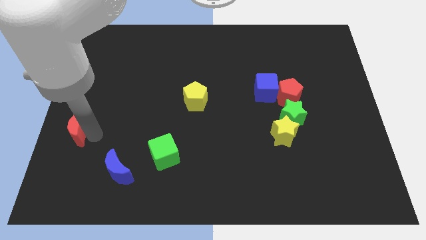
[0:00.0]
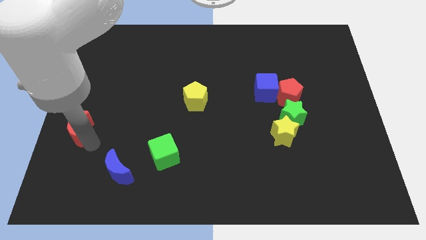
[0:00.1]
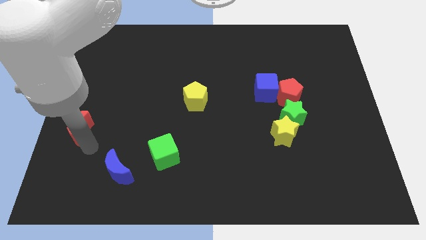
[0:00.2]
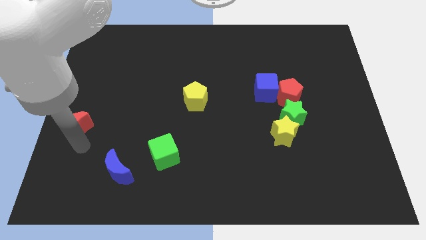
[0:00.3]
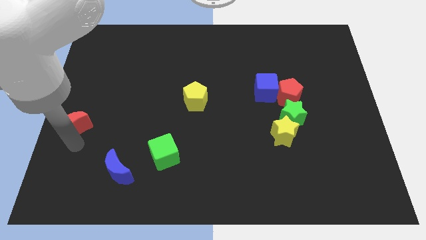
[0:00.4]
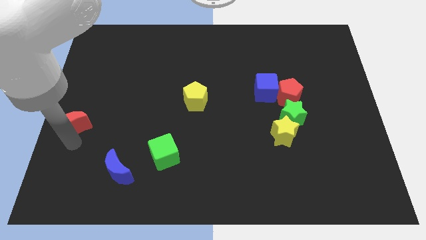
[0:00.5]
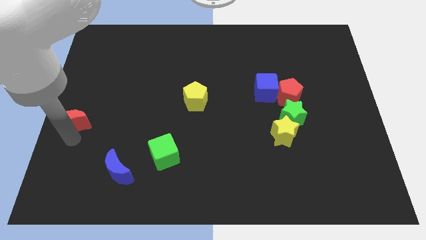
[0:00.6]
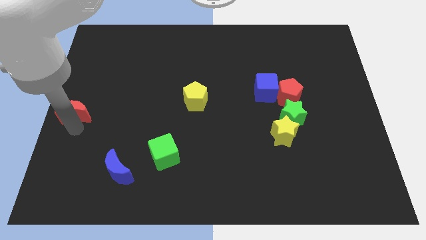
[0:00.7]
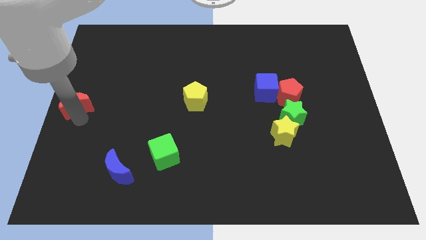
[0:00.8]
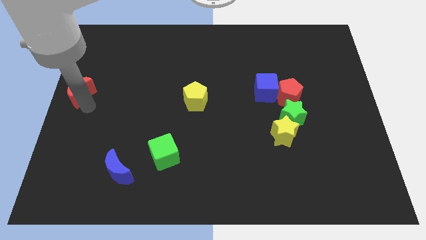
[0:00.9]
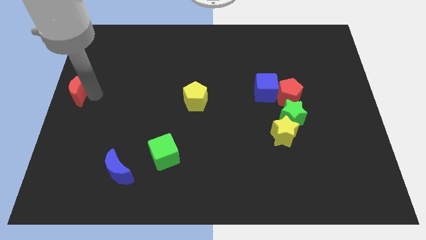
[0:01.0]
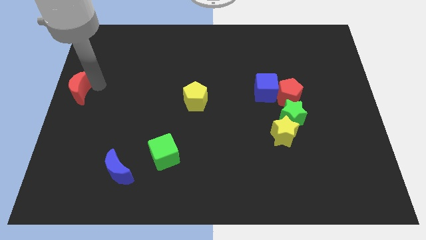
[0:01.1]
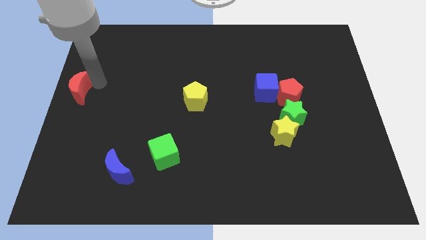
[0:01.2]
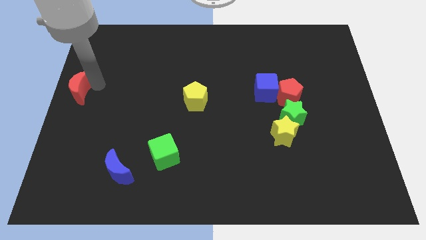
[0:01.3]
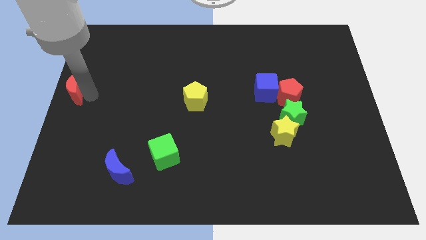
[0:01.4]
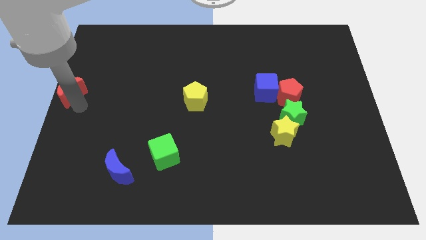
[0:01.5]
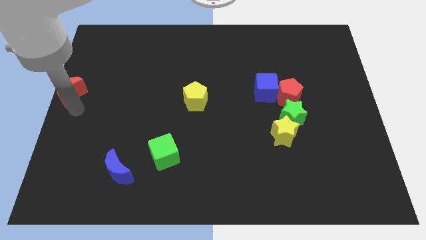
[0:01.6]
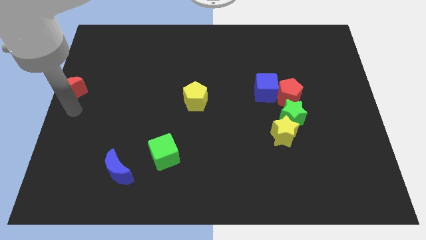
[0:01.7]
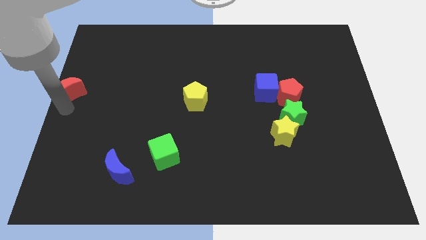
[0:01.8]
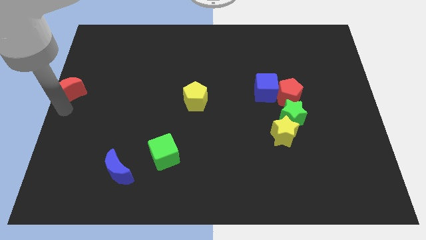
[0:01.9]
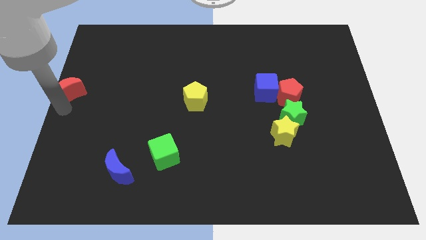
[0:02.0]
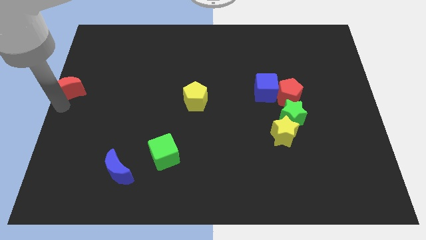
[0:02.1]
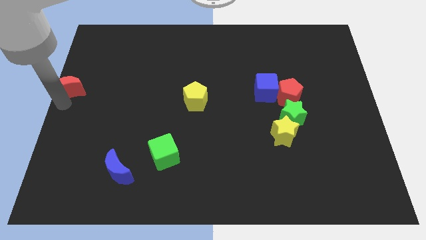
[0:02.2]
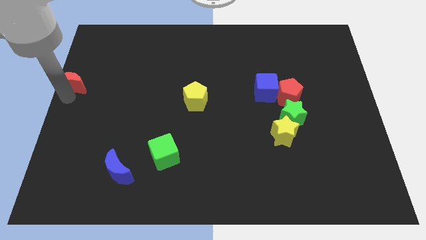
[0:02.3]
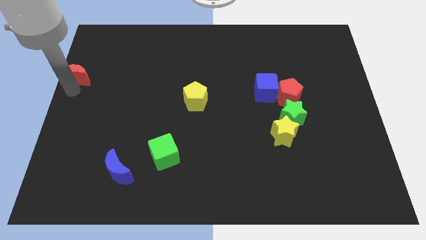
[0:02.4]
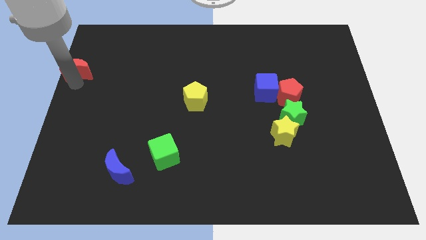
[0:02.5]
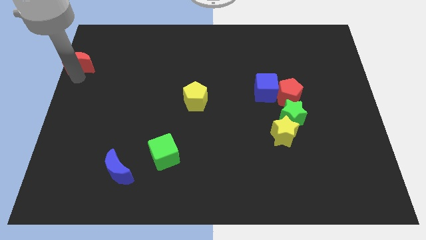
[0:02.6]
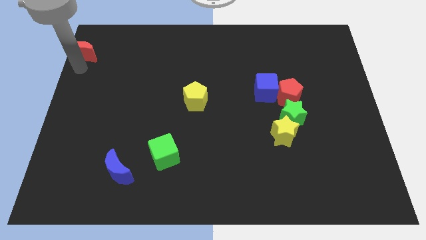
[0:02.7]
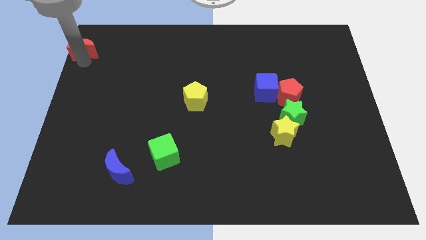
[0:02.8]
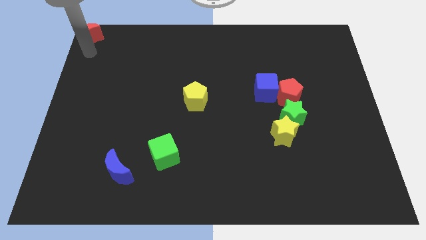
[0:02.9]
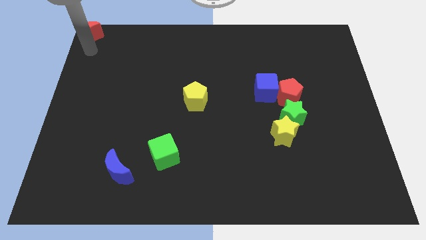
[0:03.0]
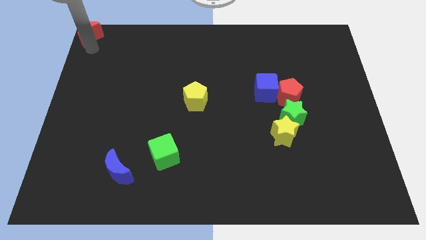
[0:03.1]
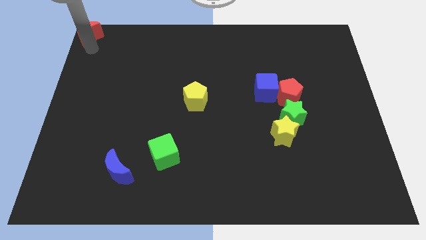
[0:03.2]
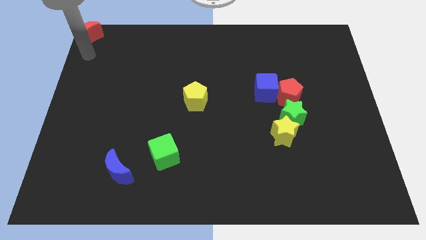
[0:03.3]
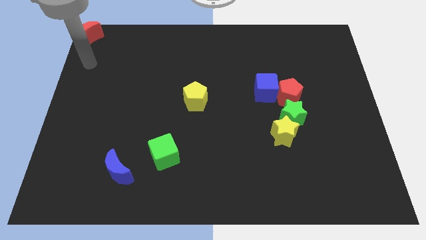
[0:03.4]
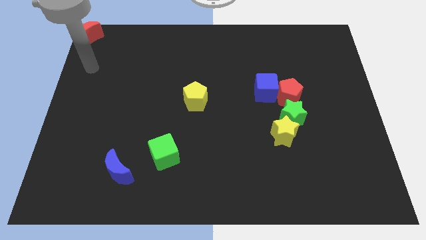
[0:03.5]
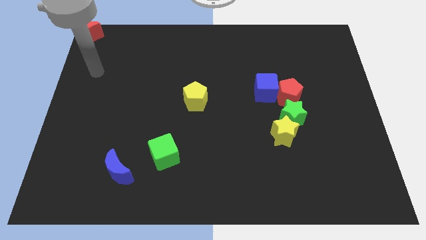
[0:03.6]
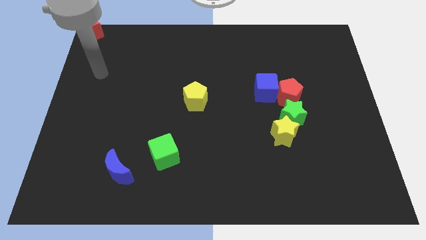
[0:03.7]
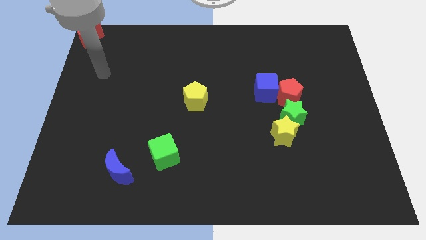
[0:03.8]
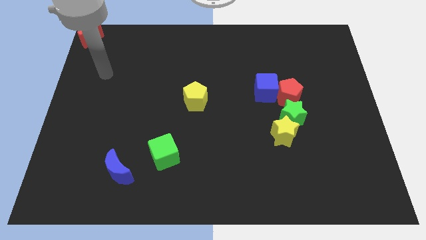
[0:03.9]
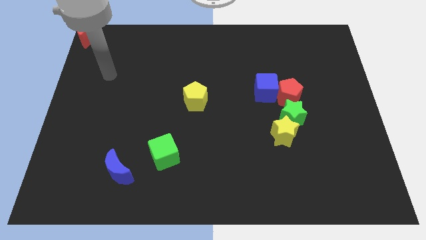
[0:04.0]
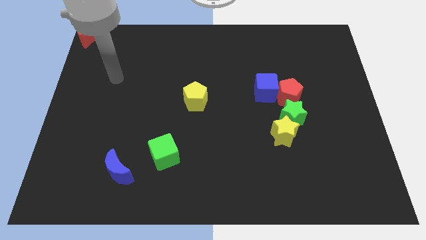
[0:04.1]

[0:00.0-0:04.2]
move the red moon to the left top corner of the board

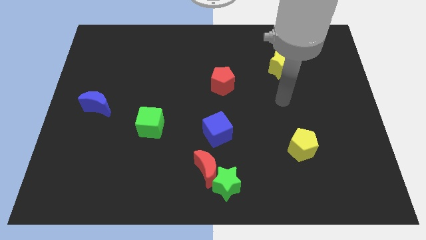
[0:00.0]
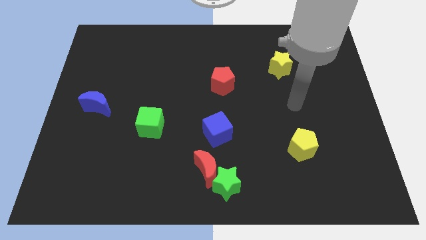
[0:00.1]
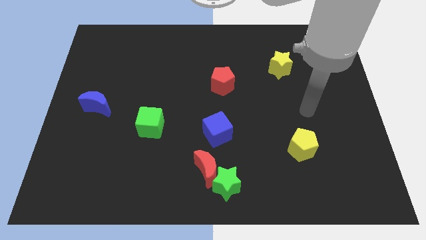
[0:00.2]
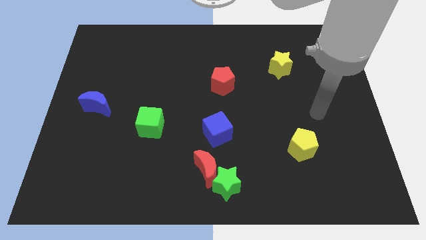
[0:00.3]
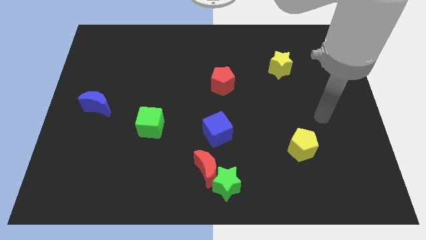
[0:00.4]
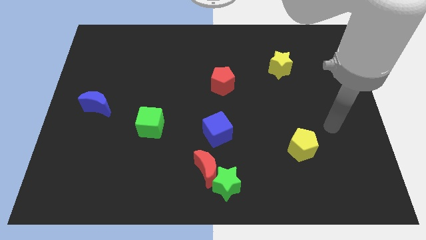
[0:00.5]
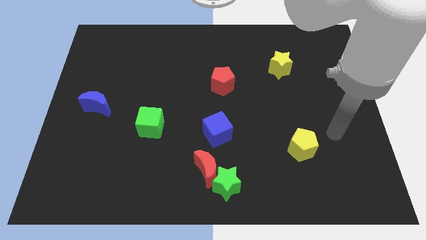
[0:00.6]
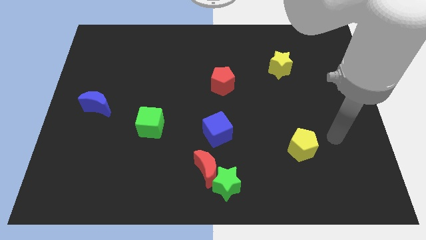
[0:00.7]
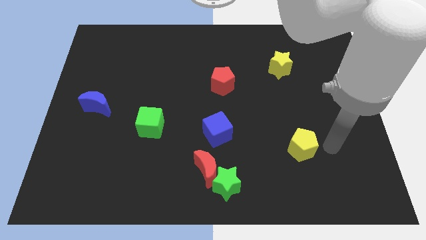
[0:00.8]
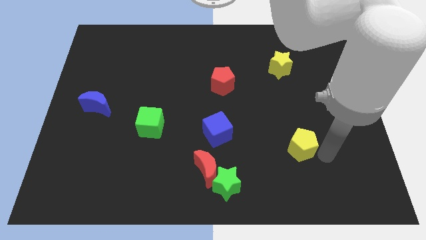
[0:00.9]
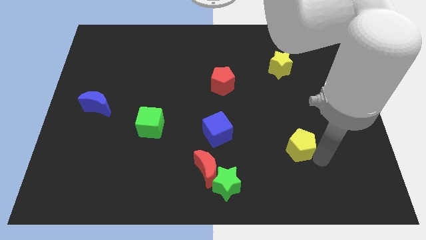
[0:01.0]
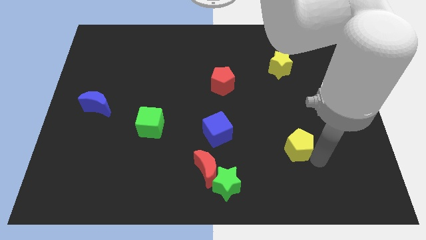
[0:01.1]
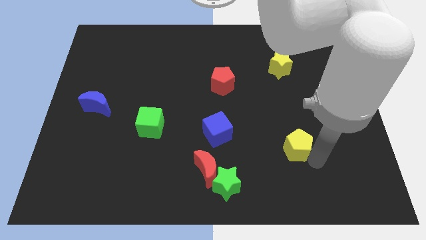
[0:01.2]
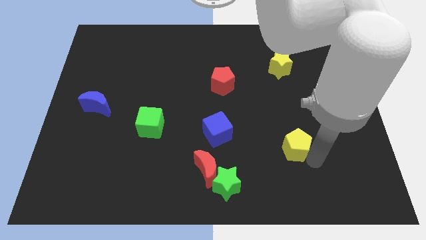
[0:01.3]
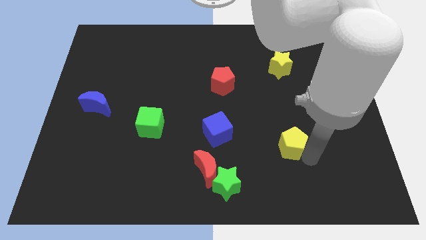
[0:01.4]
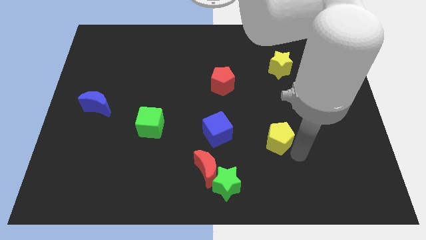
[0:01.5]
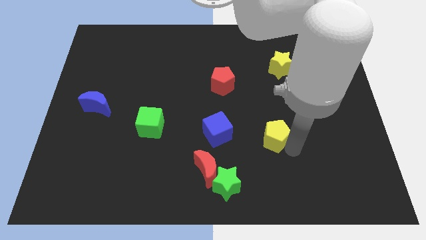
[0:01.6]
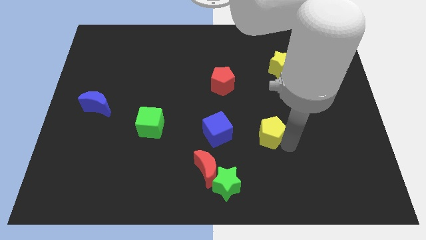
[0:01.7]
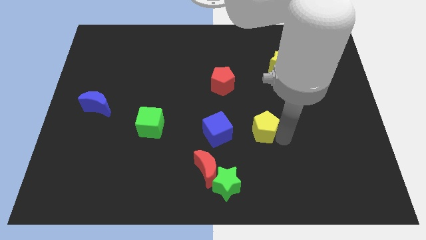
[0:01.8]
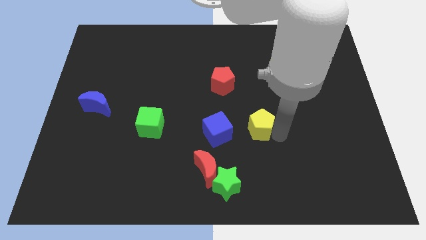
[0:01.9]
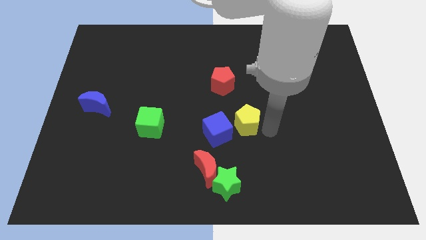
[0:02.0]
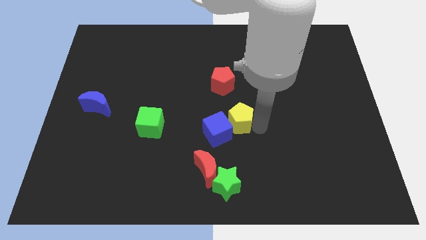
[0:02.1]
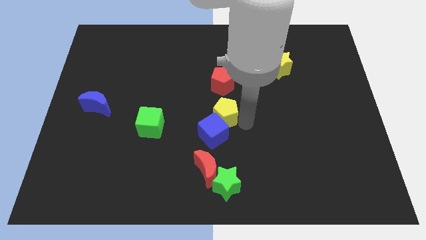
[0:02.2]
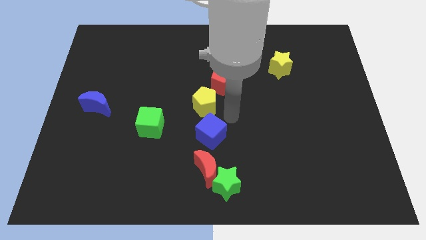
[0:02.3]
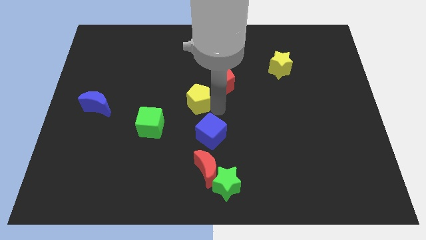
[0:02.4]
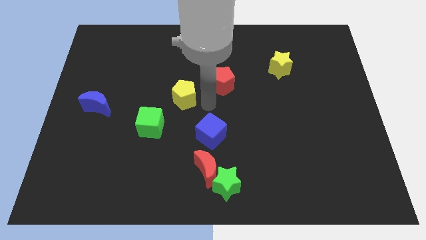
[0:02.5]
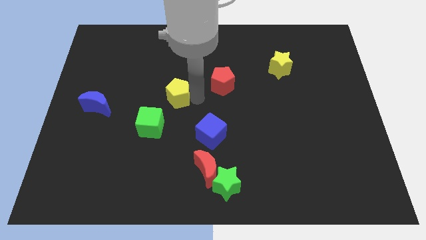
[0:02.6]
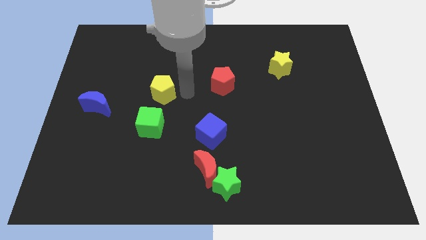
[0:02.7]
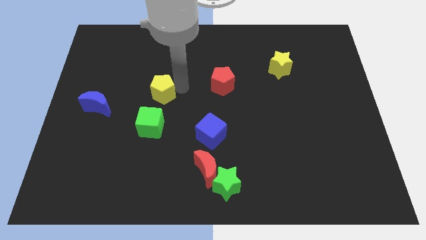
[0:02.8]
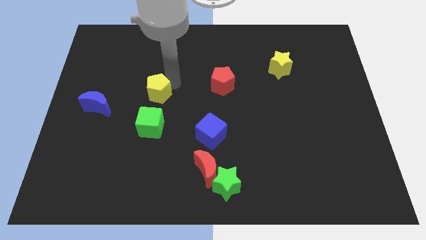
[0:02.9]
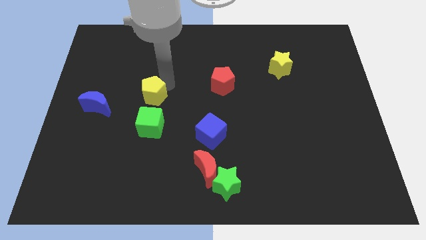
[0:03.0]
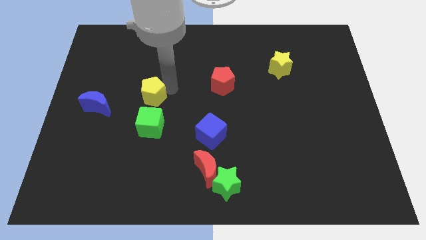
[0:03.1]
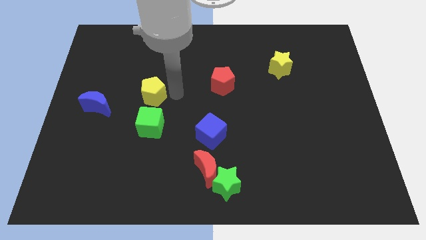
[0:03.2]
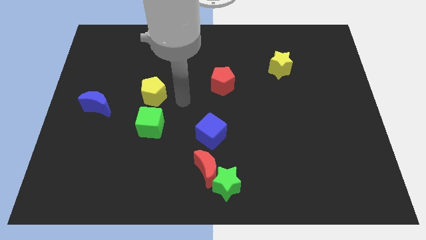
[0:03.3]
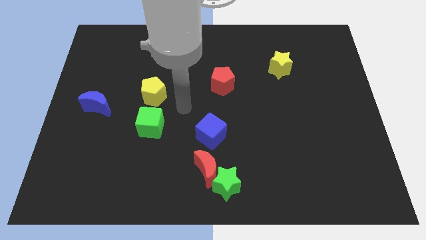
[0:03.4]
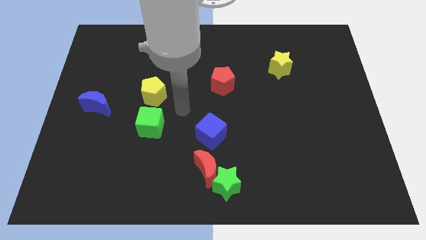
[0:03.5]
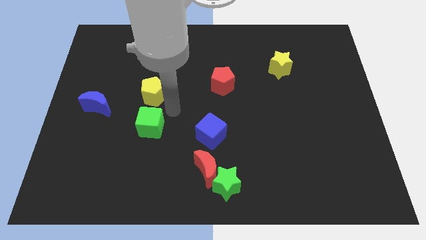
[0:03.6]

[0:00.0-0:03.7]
place the yellow pentagon above the green cube

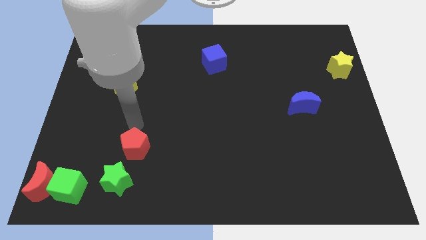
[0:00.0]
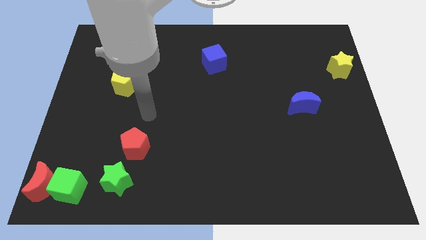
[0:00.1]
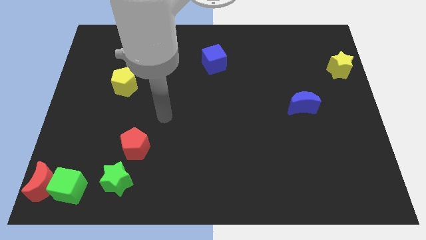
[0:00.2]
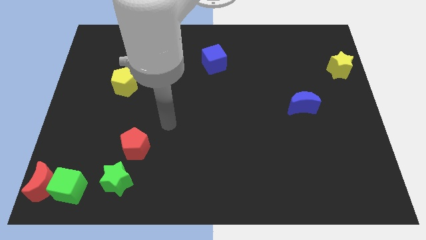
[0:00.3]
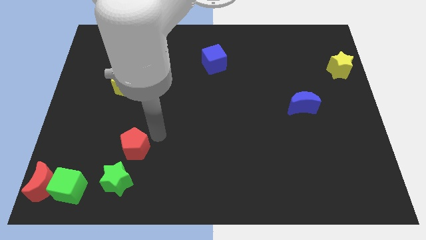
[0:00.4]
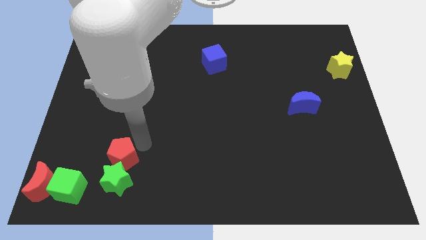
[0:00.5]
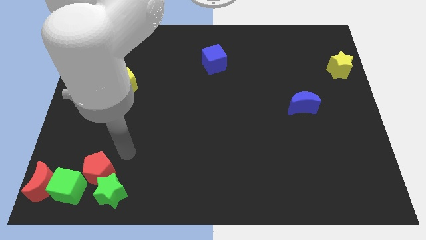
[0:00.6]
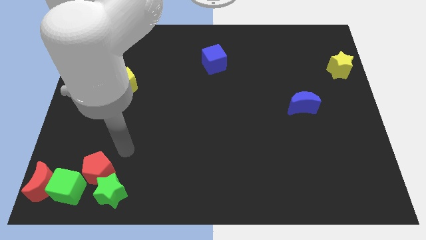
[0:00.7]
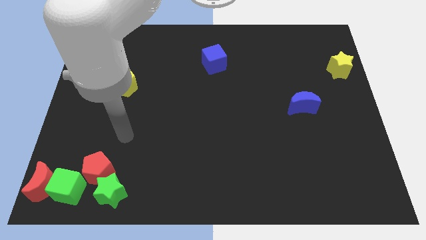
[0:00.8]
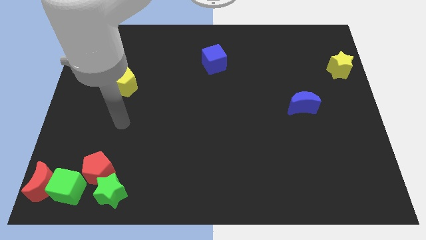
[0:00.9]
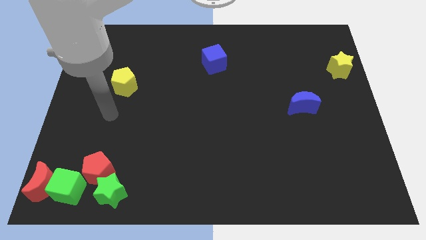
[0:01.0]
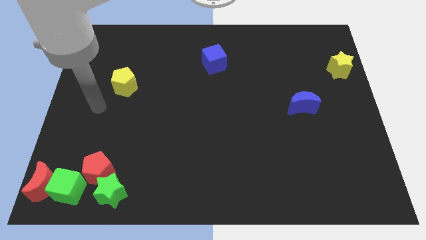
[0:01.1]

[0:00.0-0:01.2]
move the red pentagon close to the green blocks
